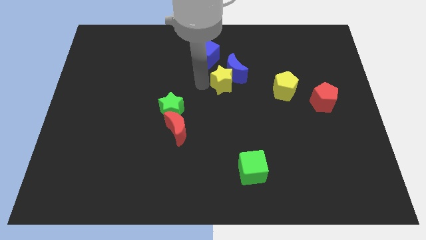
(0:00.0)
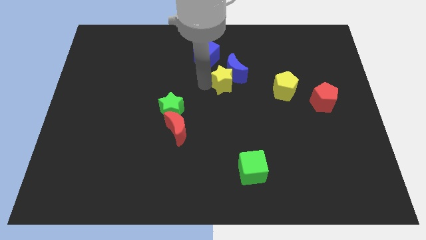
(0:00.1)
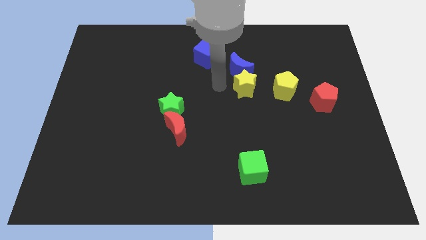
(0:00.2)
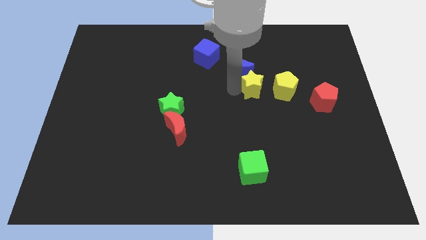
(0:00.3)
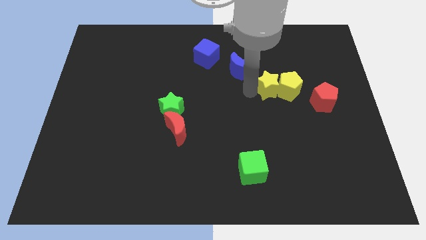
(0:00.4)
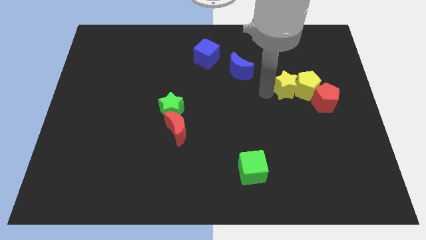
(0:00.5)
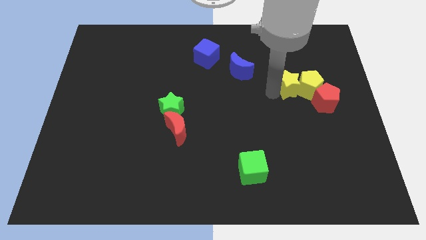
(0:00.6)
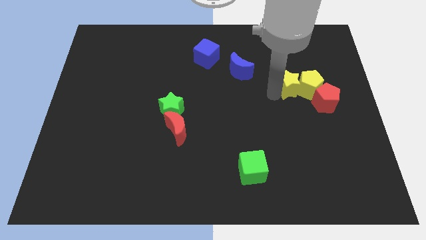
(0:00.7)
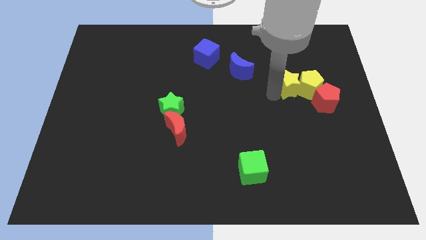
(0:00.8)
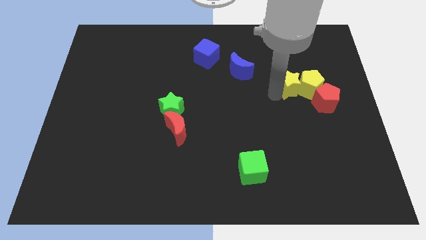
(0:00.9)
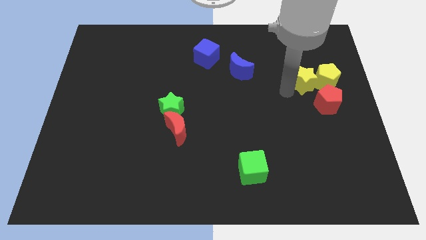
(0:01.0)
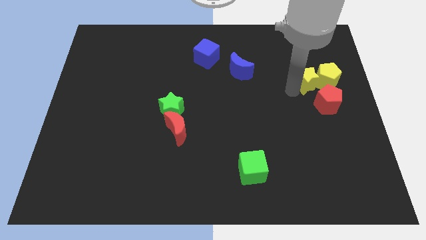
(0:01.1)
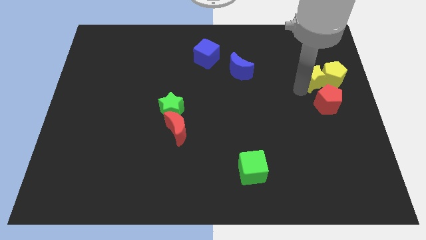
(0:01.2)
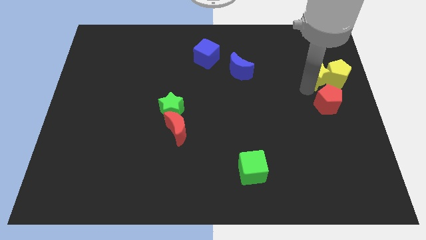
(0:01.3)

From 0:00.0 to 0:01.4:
move both the yellow blocks to the top side of the red pentagon

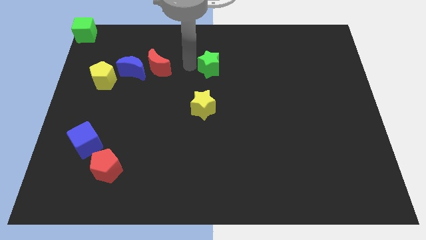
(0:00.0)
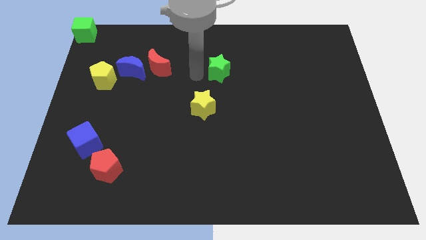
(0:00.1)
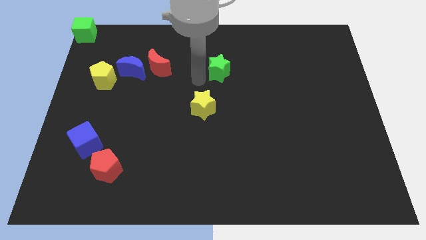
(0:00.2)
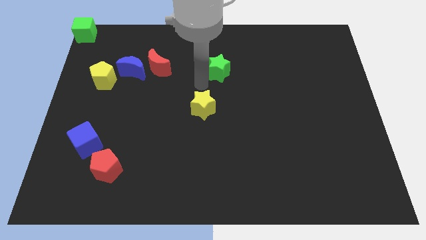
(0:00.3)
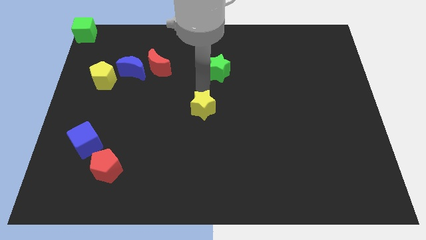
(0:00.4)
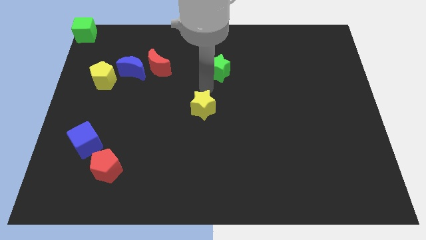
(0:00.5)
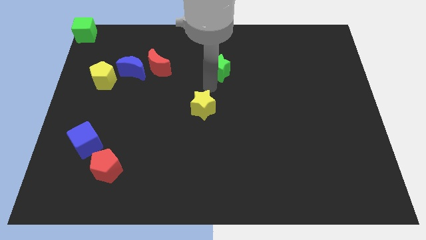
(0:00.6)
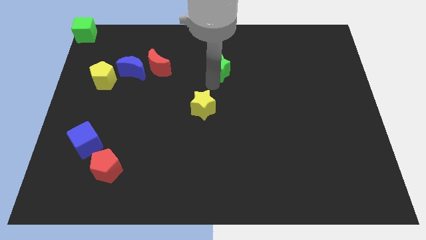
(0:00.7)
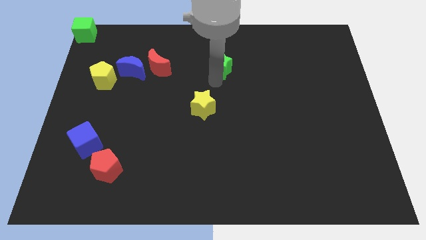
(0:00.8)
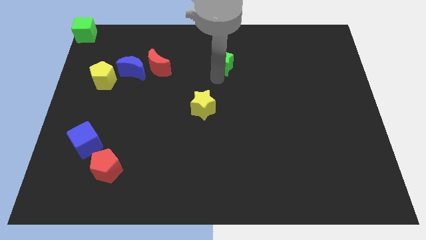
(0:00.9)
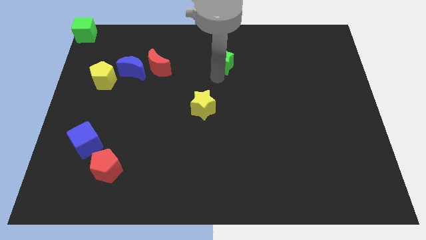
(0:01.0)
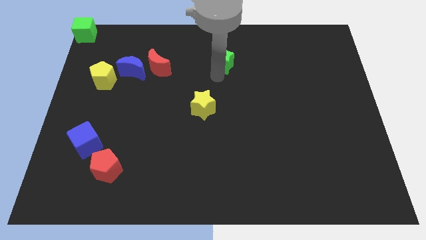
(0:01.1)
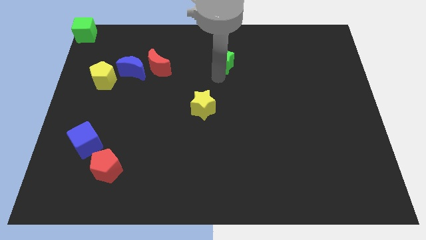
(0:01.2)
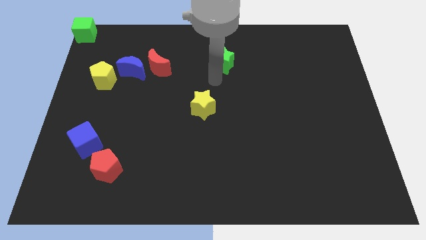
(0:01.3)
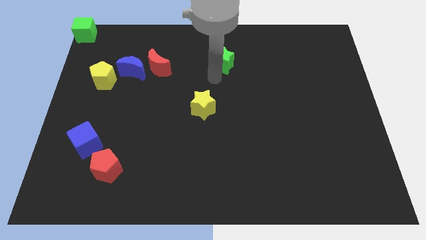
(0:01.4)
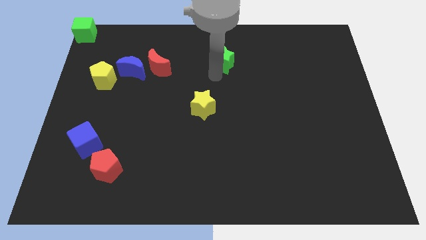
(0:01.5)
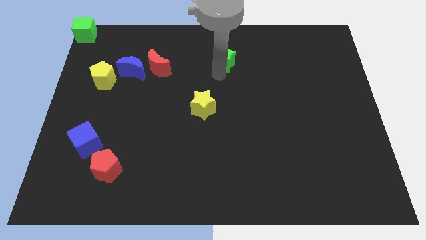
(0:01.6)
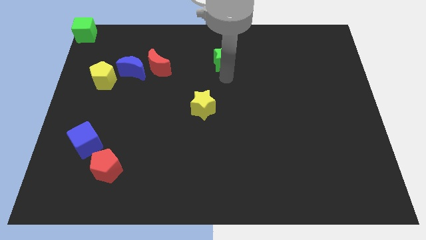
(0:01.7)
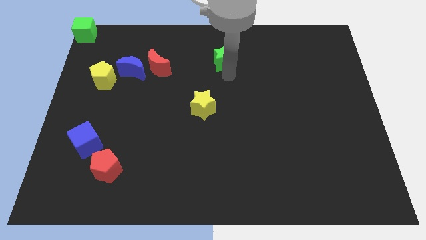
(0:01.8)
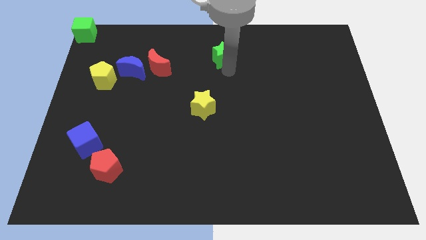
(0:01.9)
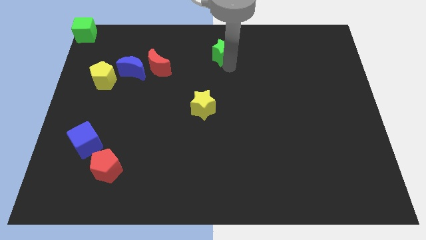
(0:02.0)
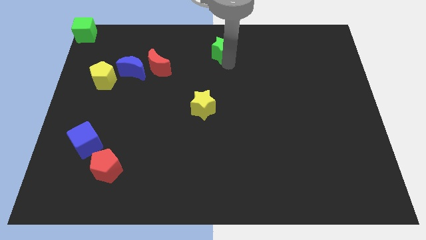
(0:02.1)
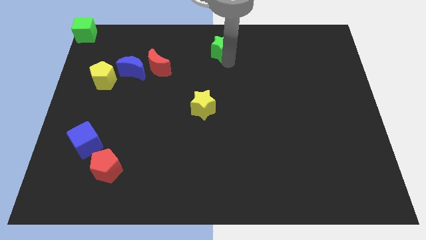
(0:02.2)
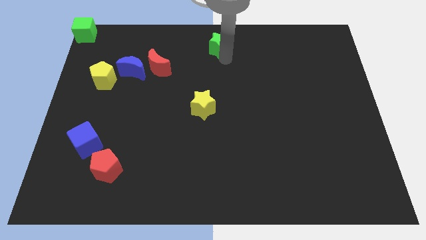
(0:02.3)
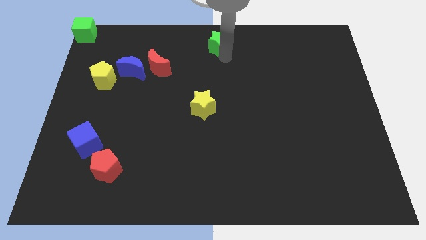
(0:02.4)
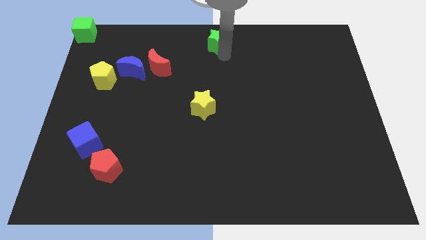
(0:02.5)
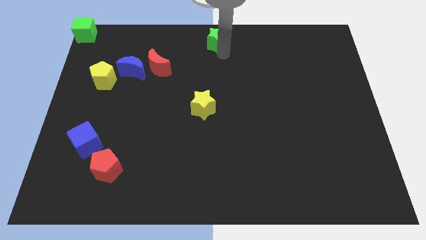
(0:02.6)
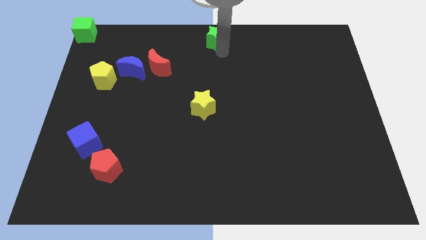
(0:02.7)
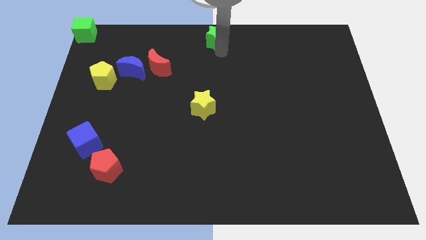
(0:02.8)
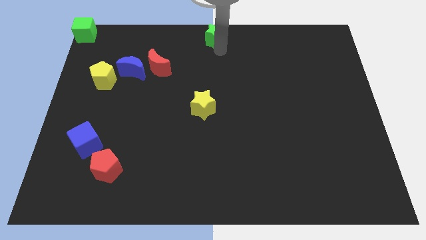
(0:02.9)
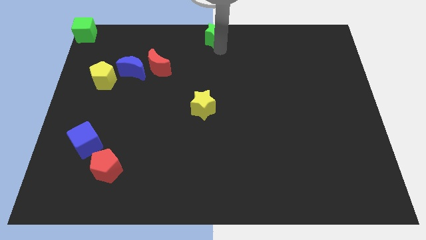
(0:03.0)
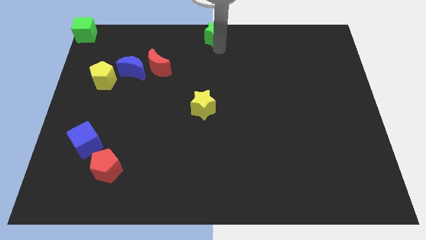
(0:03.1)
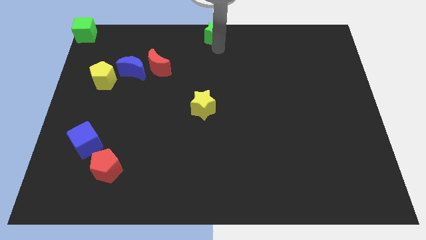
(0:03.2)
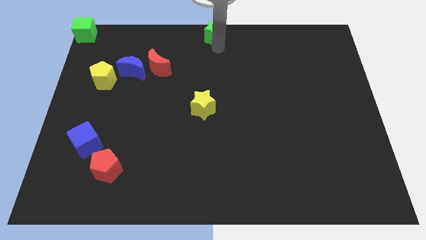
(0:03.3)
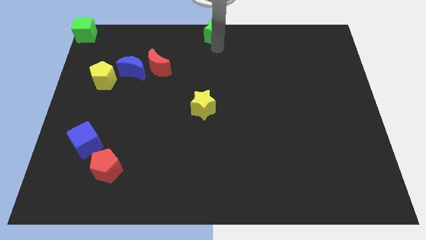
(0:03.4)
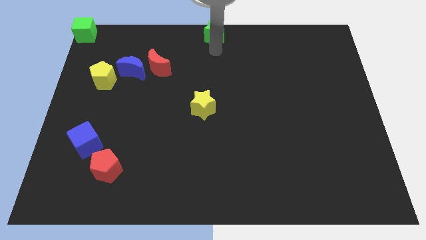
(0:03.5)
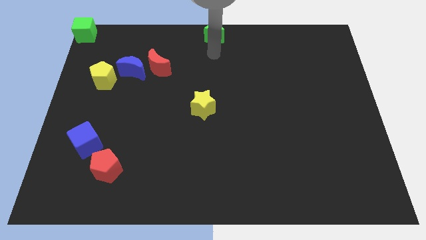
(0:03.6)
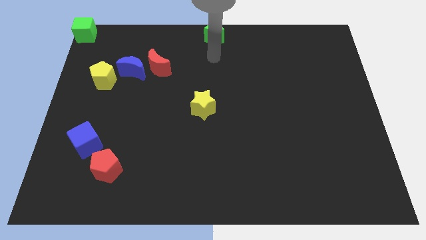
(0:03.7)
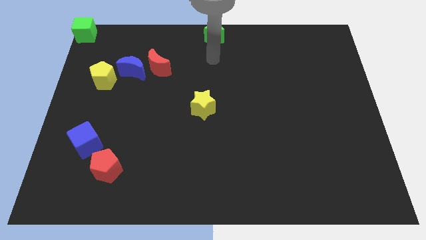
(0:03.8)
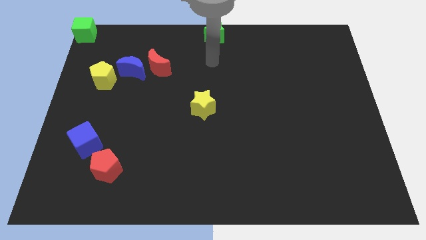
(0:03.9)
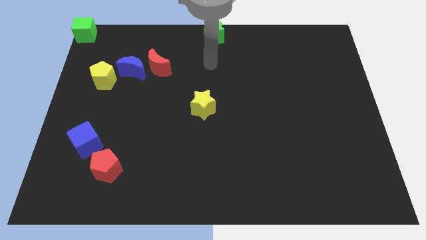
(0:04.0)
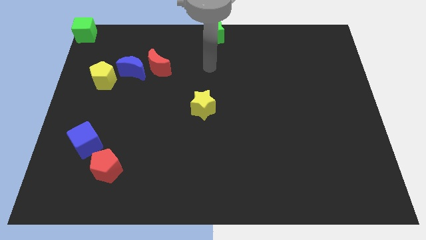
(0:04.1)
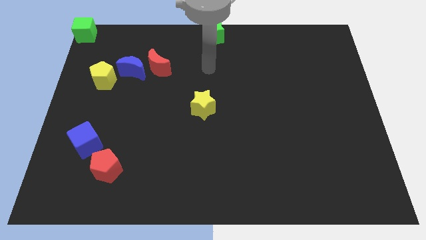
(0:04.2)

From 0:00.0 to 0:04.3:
move the green star to the top side of the board

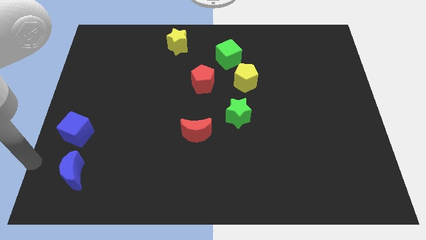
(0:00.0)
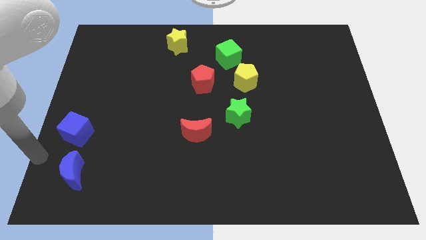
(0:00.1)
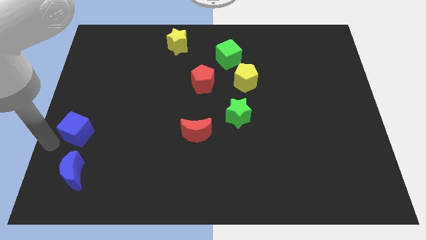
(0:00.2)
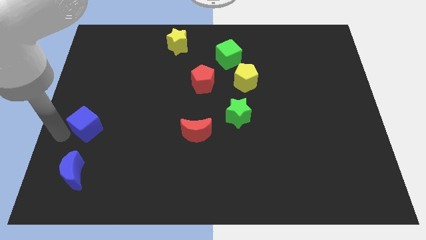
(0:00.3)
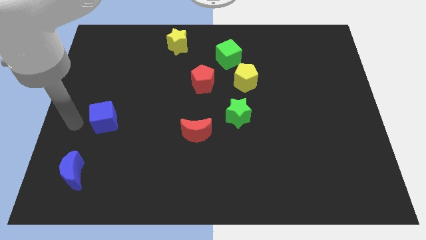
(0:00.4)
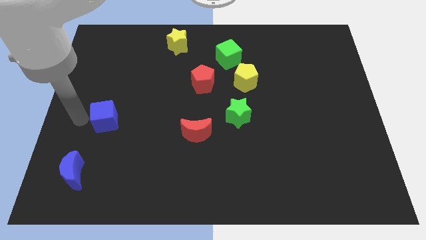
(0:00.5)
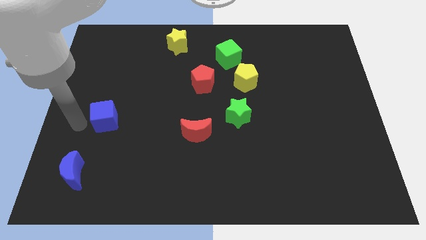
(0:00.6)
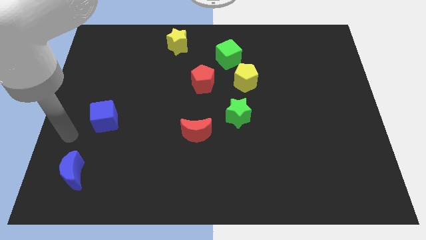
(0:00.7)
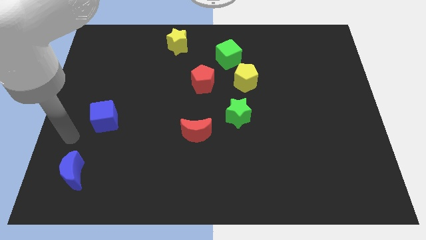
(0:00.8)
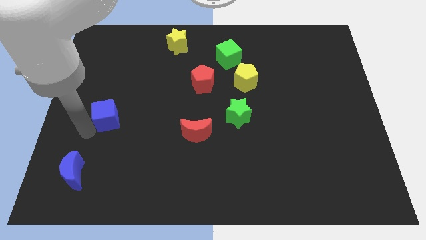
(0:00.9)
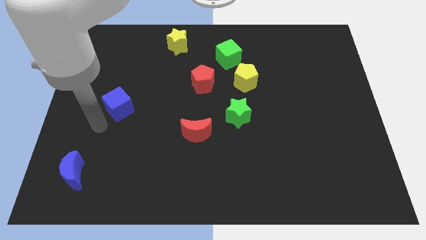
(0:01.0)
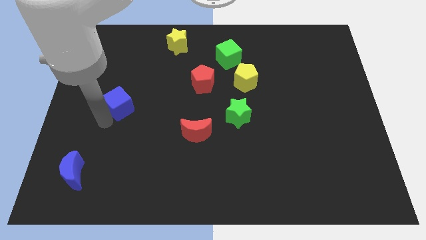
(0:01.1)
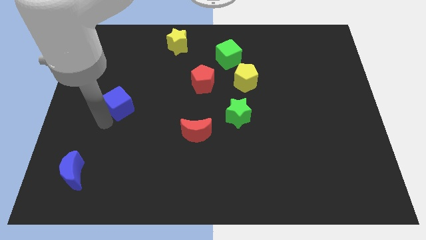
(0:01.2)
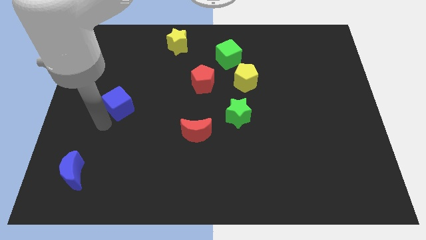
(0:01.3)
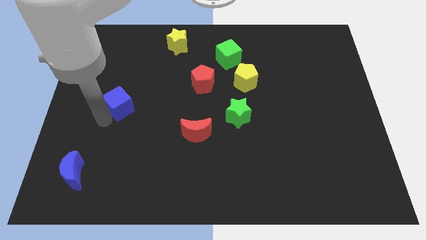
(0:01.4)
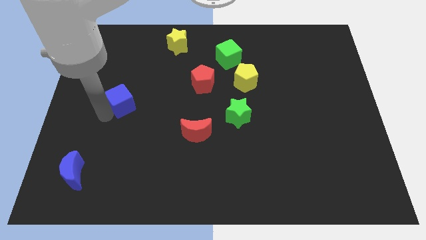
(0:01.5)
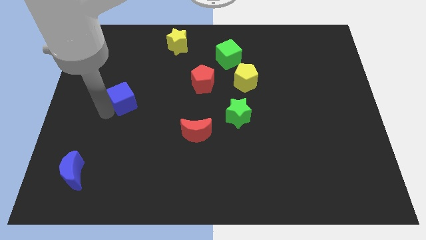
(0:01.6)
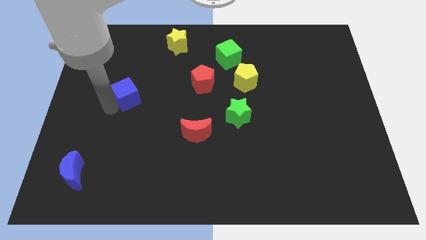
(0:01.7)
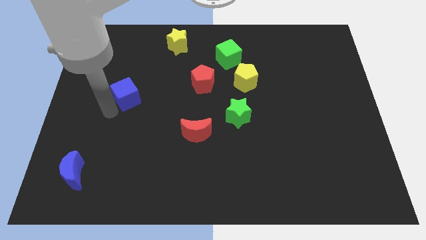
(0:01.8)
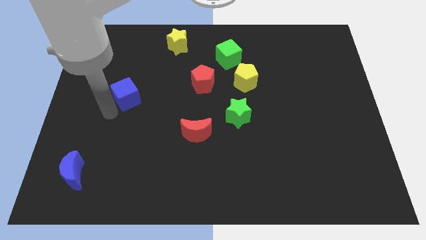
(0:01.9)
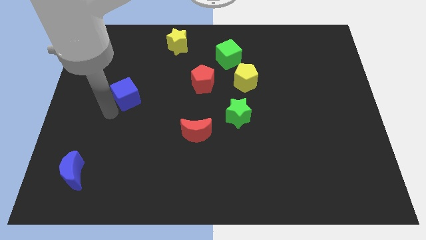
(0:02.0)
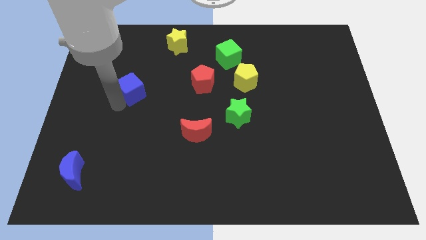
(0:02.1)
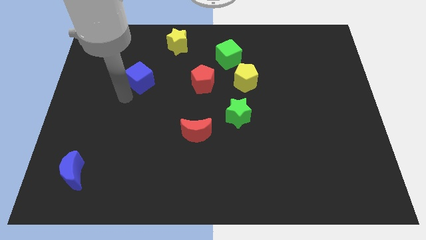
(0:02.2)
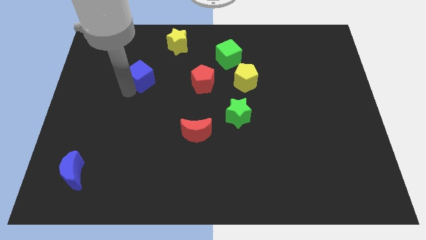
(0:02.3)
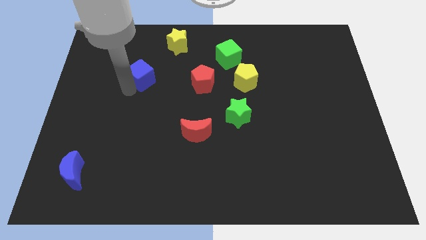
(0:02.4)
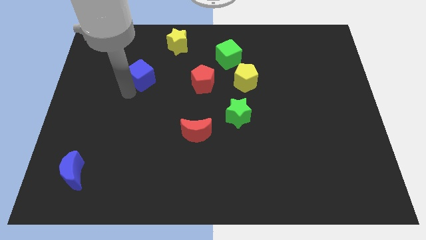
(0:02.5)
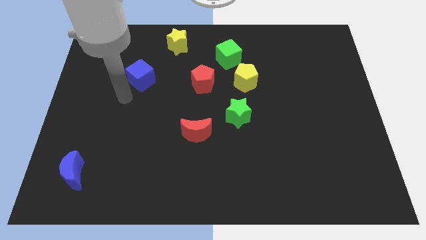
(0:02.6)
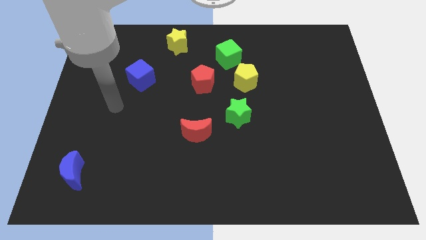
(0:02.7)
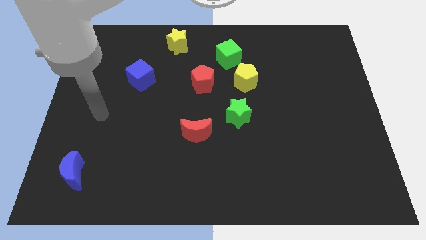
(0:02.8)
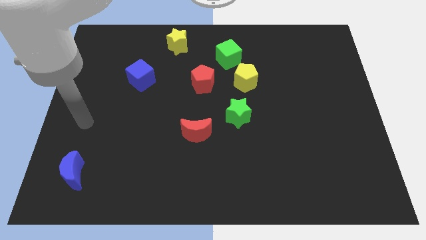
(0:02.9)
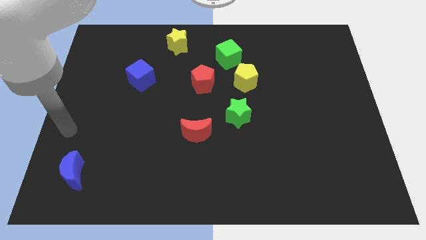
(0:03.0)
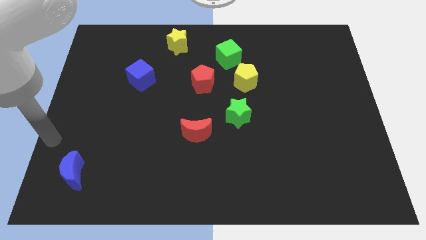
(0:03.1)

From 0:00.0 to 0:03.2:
place the blue cube to the left side of red pentagon
